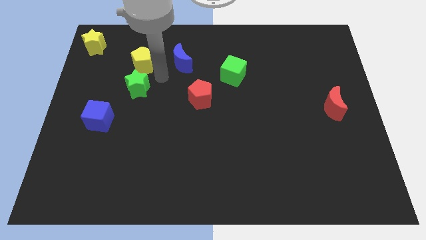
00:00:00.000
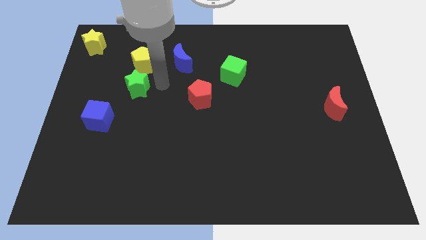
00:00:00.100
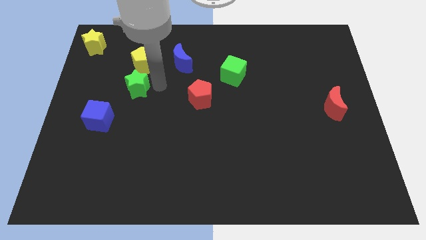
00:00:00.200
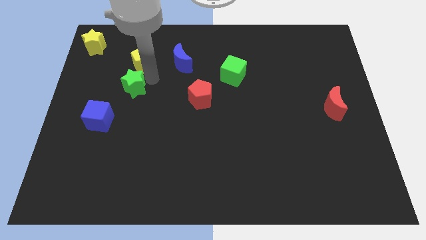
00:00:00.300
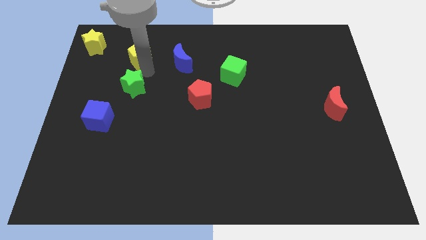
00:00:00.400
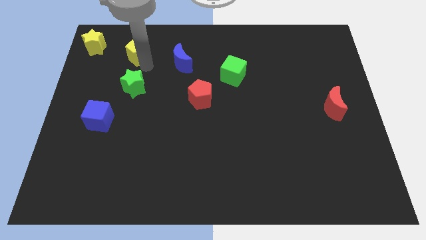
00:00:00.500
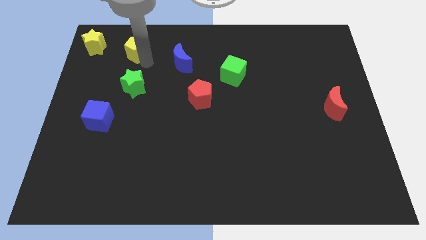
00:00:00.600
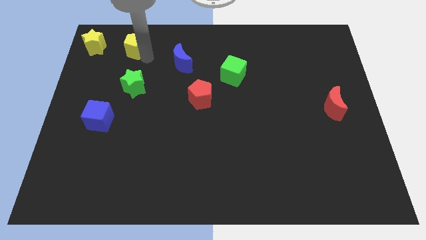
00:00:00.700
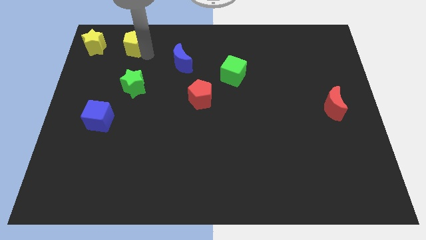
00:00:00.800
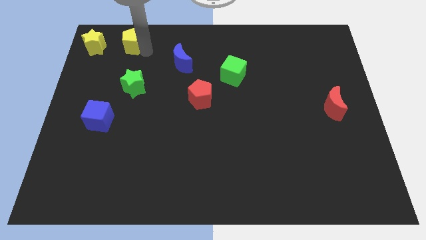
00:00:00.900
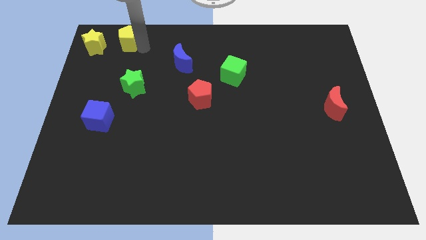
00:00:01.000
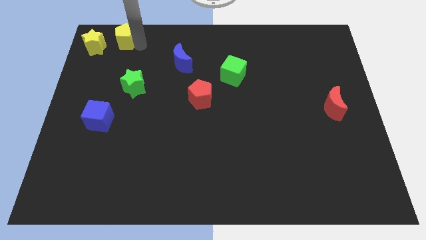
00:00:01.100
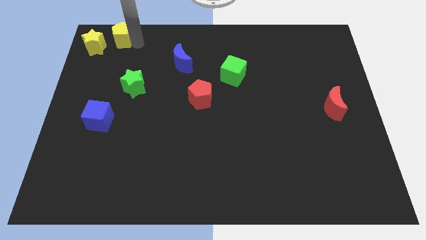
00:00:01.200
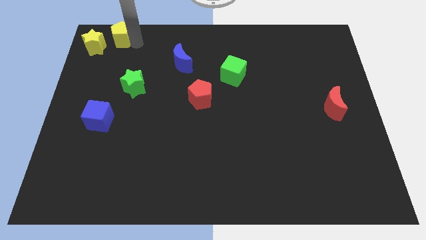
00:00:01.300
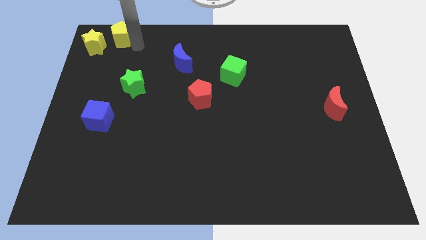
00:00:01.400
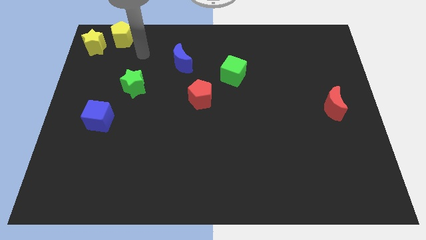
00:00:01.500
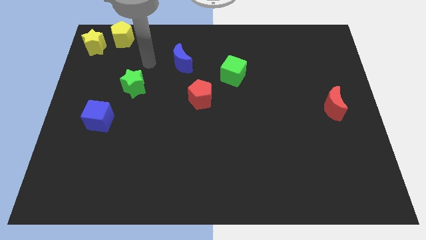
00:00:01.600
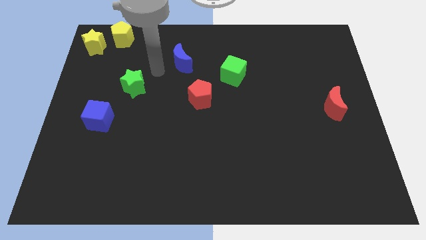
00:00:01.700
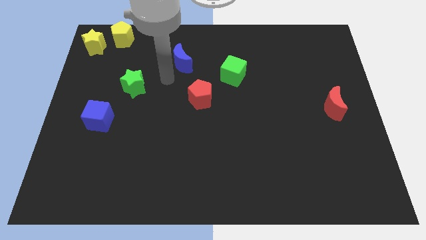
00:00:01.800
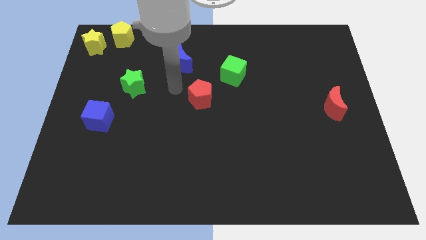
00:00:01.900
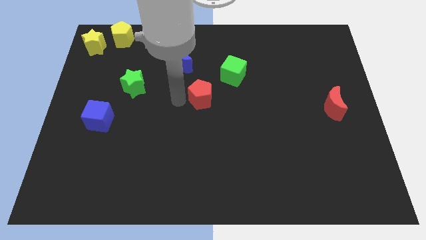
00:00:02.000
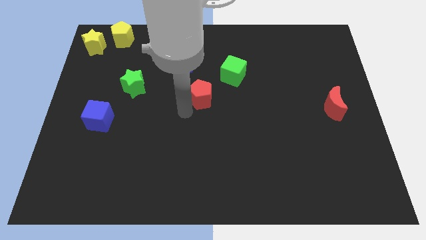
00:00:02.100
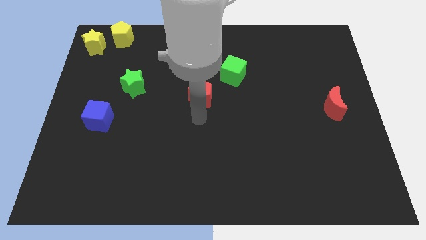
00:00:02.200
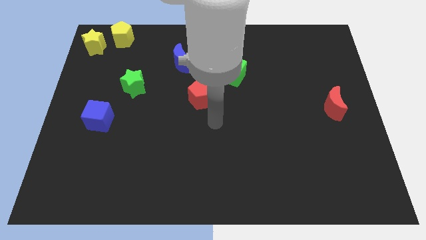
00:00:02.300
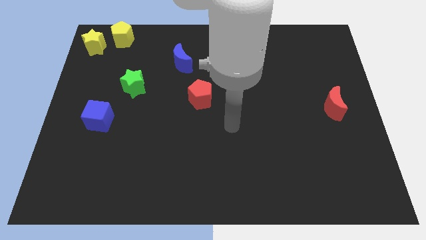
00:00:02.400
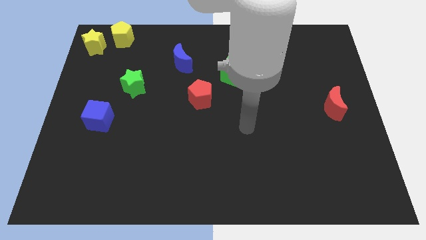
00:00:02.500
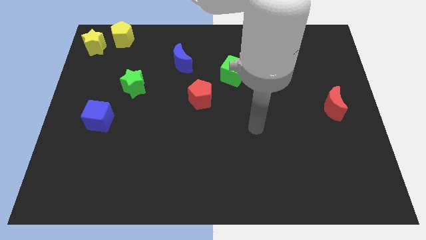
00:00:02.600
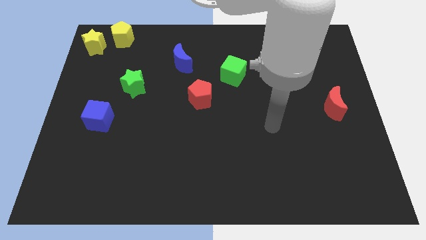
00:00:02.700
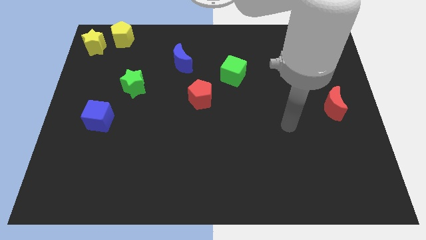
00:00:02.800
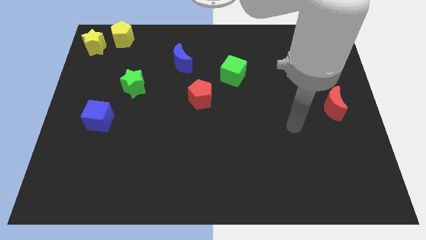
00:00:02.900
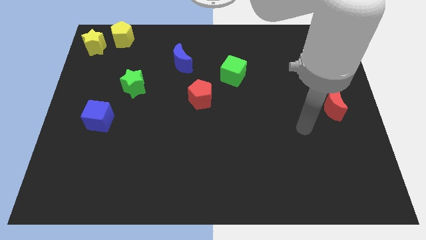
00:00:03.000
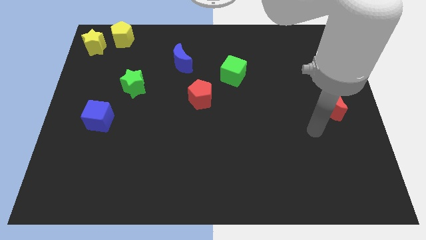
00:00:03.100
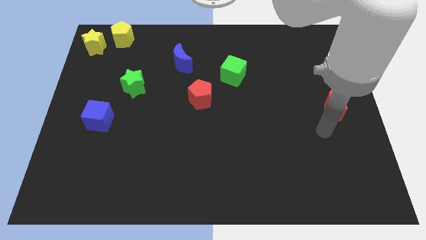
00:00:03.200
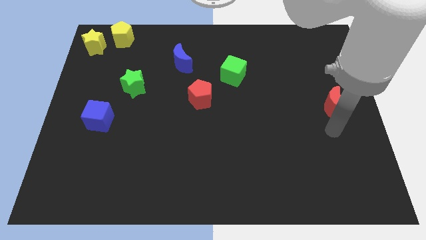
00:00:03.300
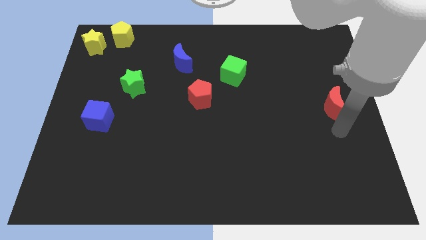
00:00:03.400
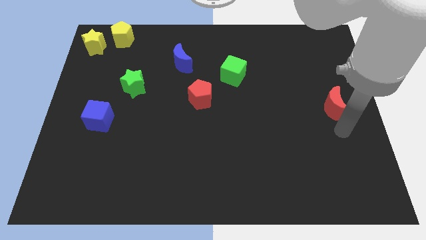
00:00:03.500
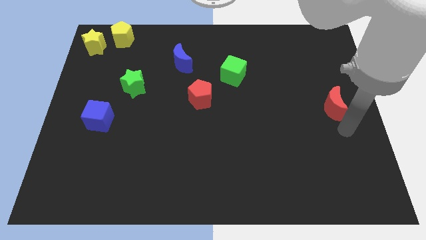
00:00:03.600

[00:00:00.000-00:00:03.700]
move your arm below the red moon

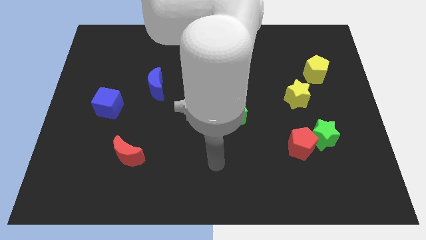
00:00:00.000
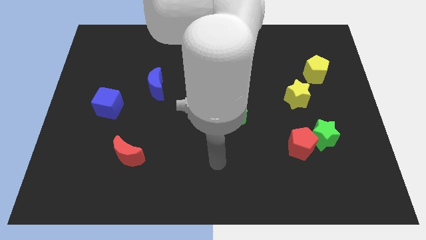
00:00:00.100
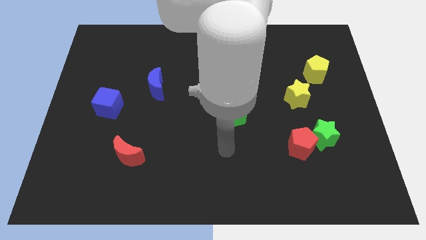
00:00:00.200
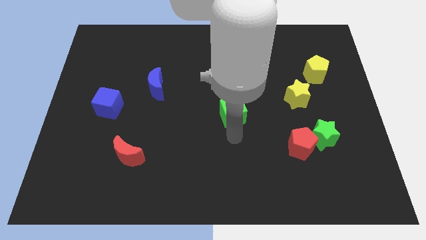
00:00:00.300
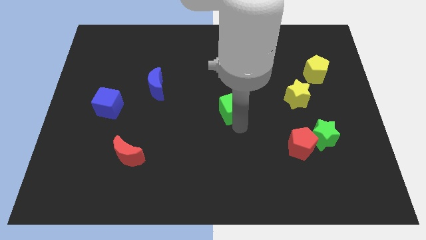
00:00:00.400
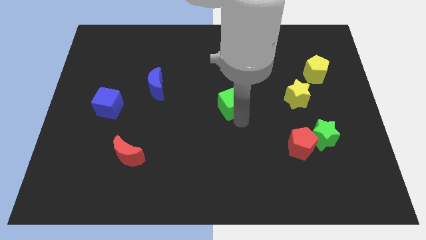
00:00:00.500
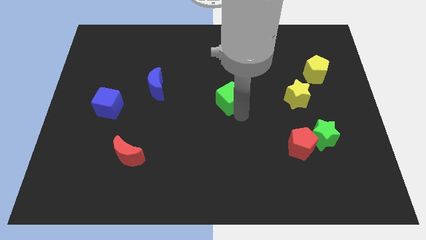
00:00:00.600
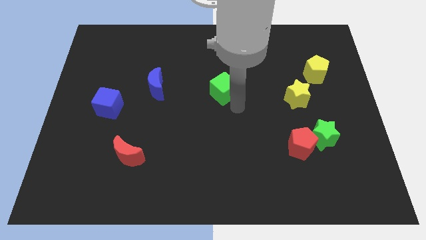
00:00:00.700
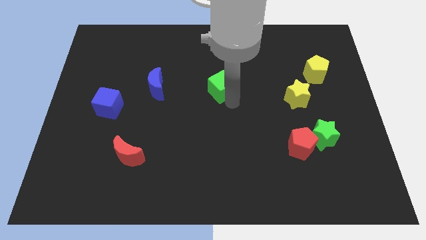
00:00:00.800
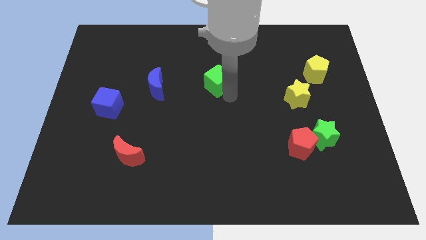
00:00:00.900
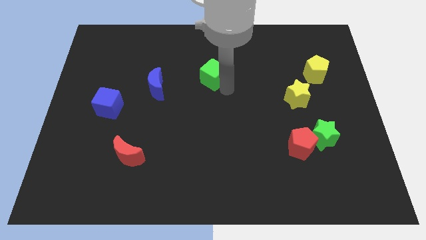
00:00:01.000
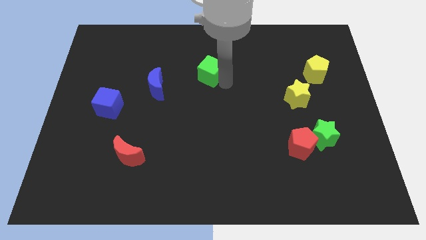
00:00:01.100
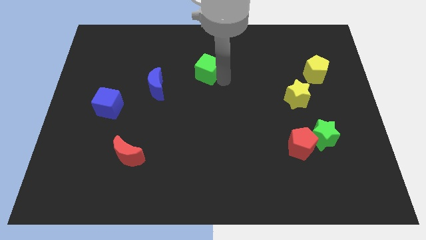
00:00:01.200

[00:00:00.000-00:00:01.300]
put the green cube at the top right of the blue crescent

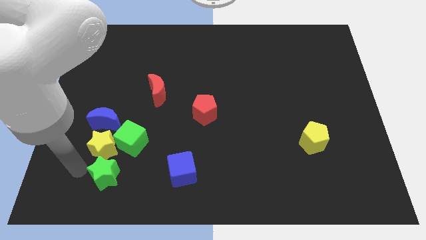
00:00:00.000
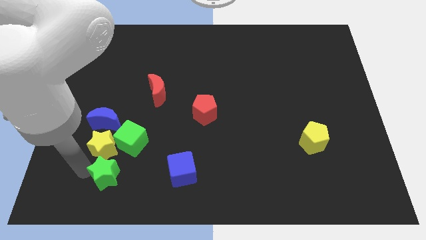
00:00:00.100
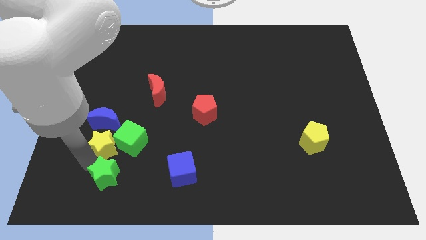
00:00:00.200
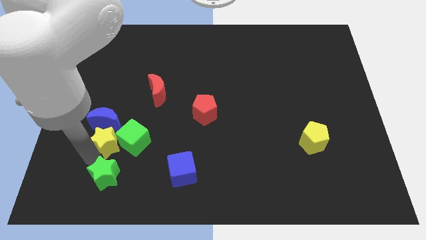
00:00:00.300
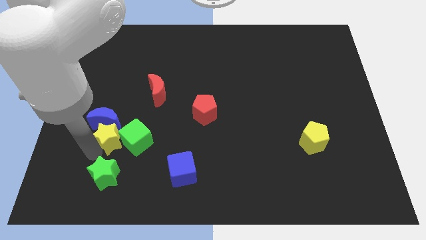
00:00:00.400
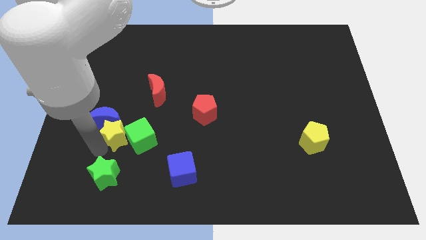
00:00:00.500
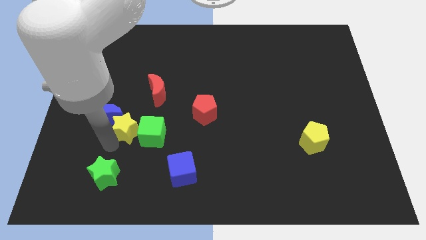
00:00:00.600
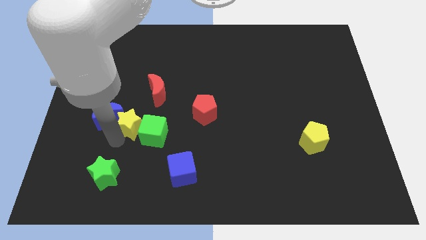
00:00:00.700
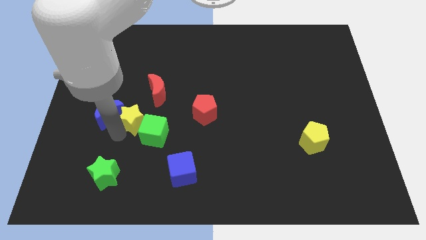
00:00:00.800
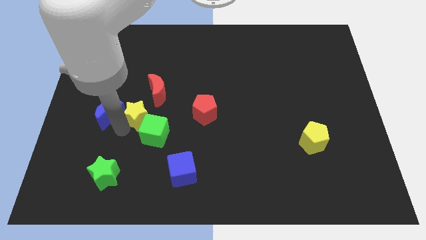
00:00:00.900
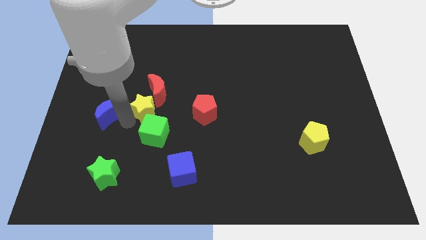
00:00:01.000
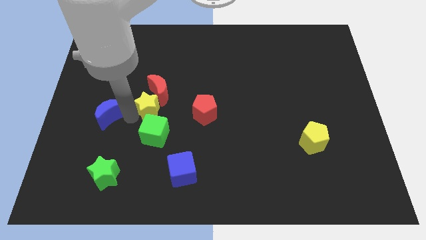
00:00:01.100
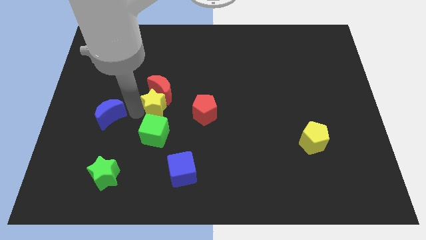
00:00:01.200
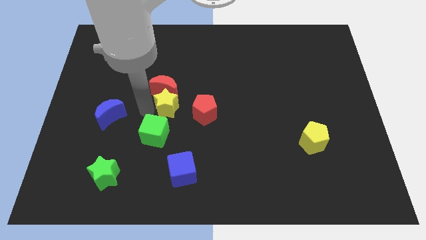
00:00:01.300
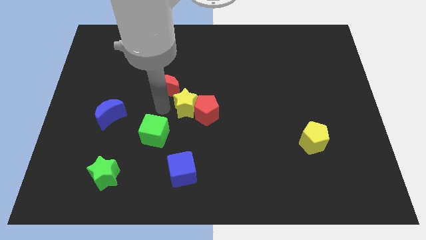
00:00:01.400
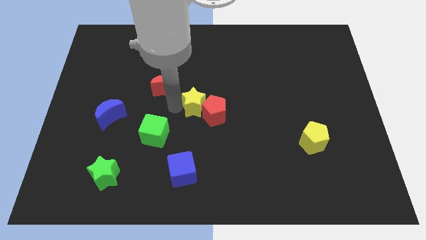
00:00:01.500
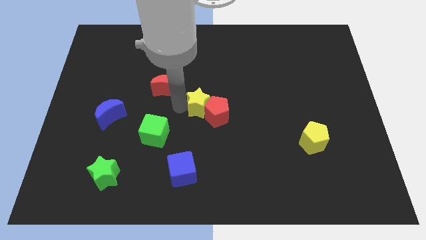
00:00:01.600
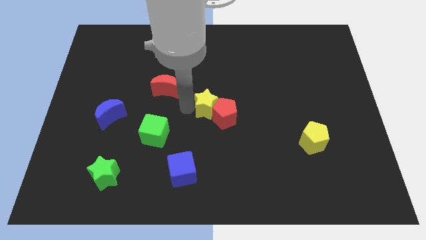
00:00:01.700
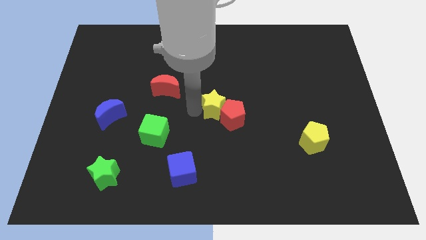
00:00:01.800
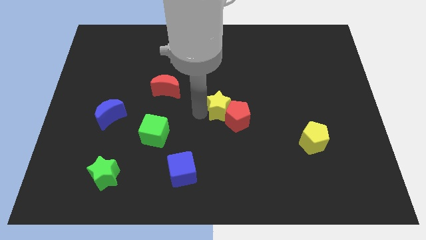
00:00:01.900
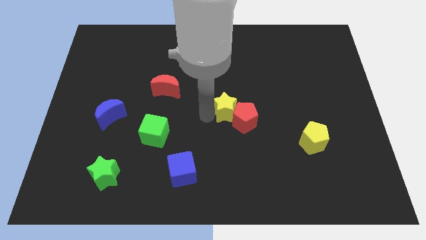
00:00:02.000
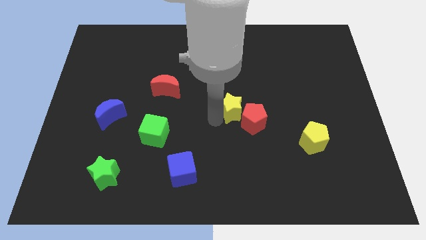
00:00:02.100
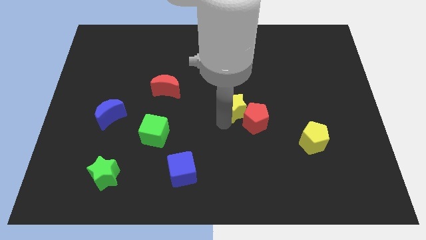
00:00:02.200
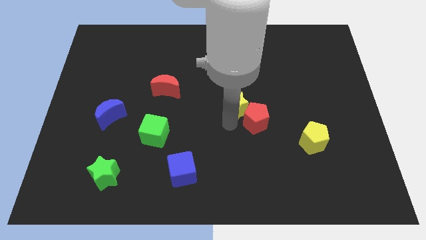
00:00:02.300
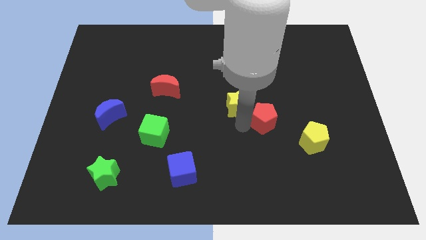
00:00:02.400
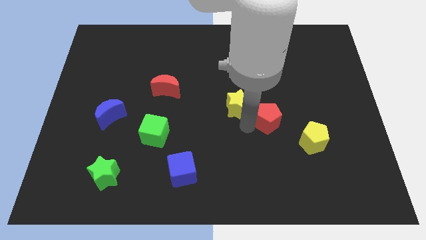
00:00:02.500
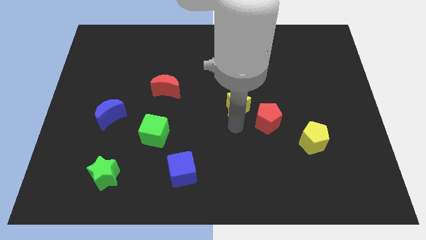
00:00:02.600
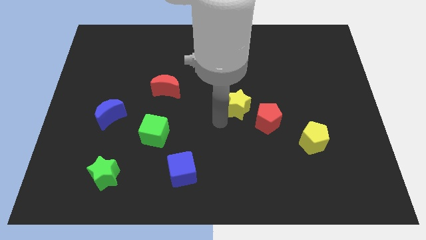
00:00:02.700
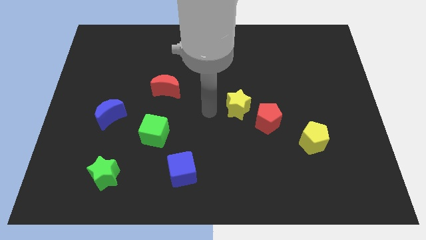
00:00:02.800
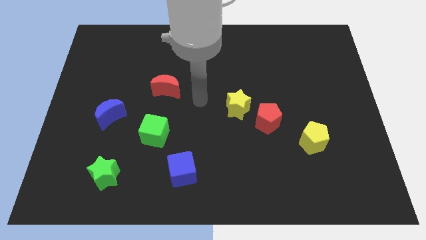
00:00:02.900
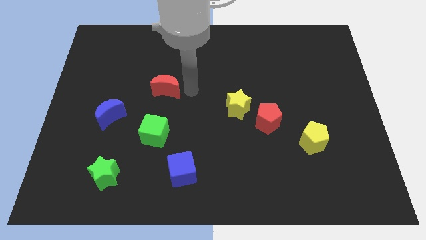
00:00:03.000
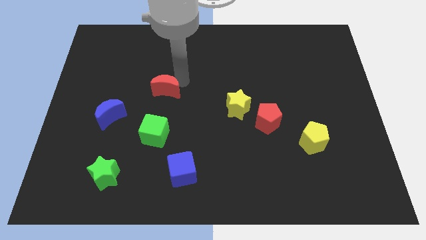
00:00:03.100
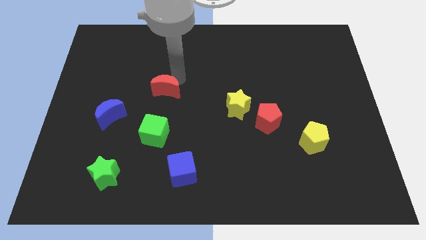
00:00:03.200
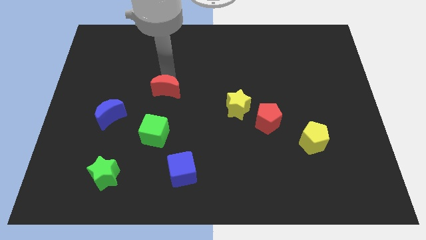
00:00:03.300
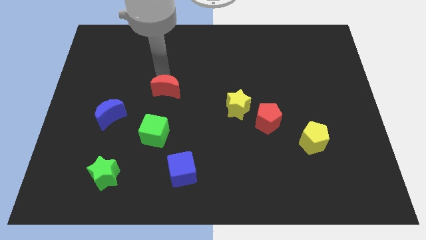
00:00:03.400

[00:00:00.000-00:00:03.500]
push the yellow star into the red pentagon

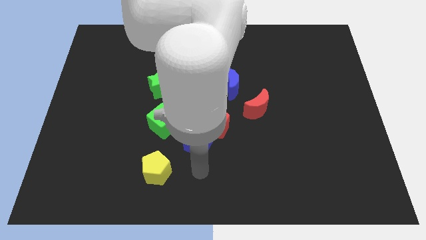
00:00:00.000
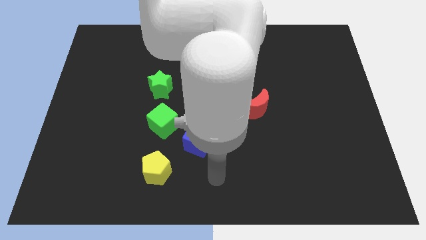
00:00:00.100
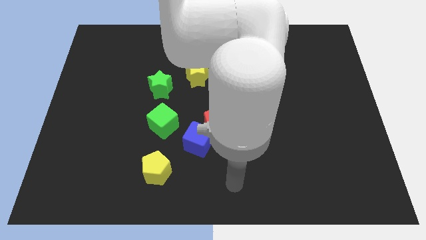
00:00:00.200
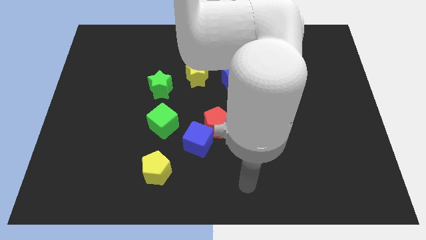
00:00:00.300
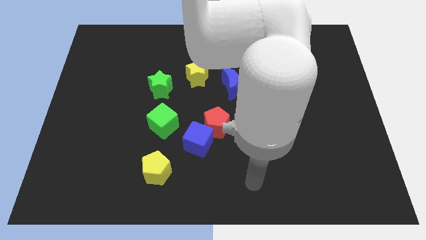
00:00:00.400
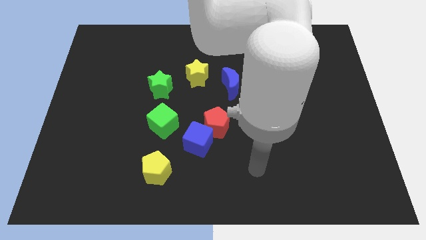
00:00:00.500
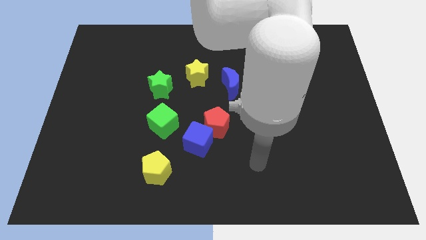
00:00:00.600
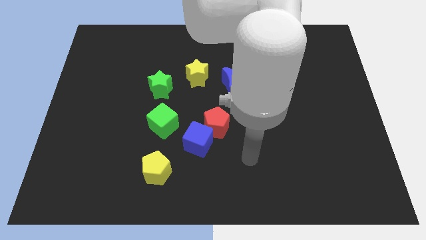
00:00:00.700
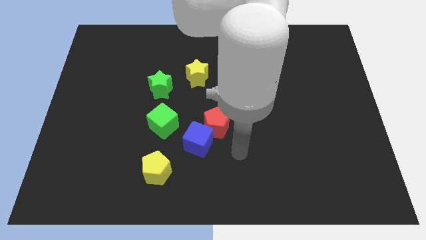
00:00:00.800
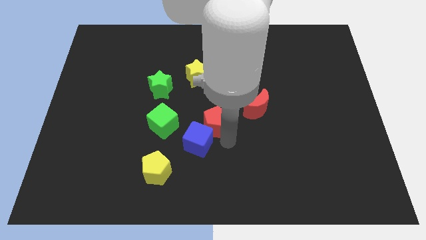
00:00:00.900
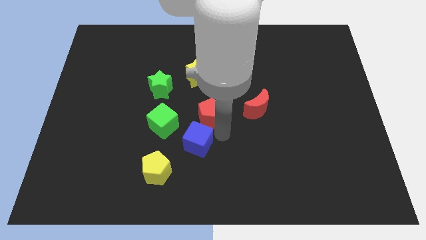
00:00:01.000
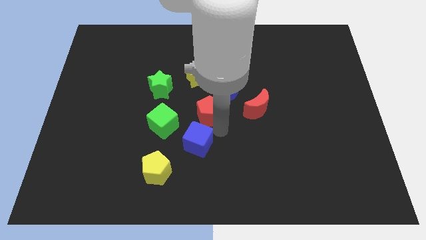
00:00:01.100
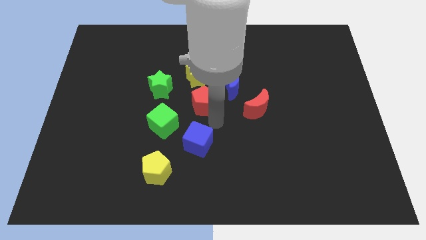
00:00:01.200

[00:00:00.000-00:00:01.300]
move the red pentagon to the center of the board
